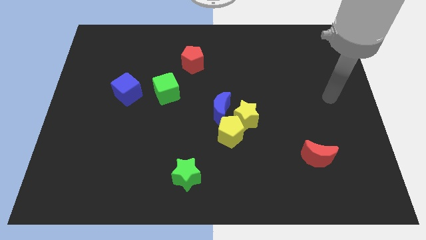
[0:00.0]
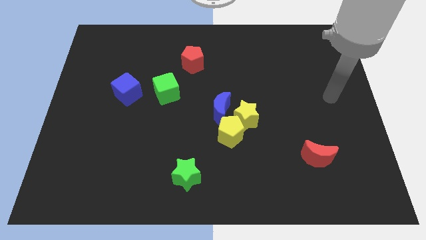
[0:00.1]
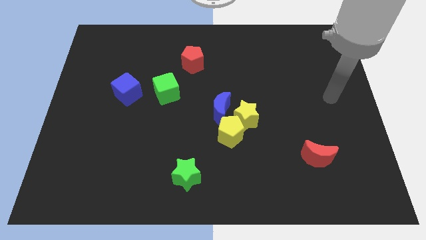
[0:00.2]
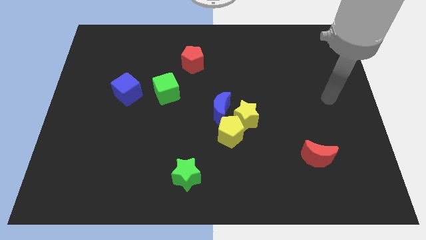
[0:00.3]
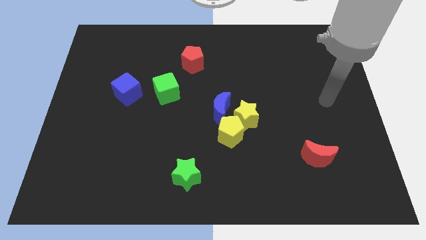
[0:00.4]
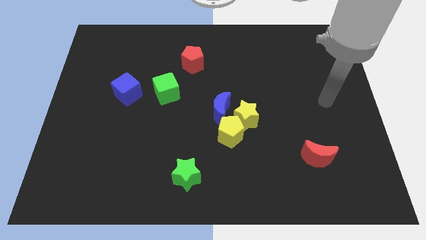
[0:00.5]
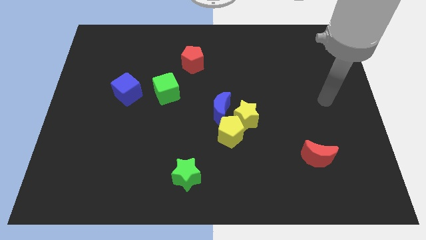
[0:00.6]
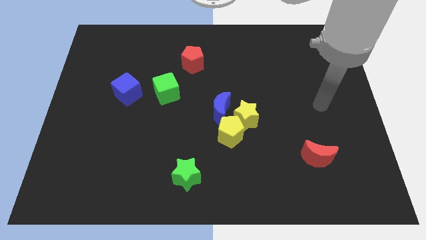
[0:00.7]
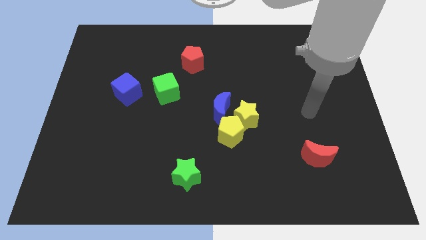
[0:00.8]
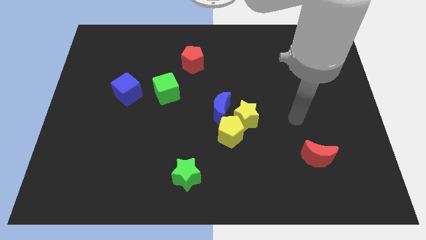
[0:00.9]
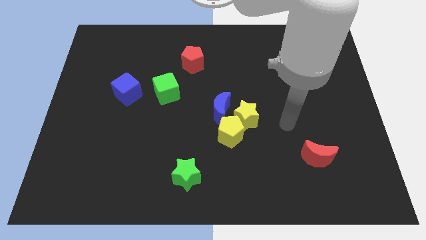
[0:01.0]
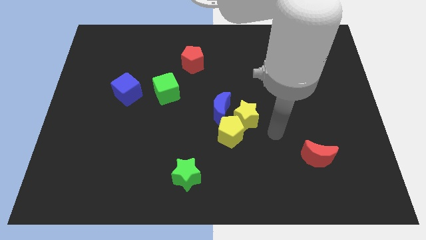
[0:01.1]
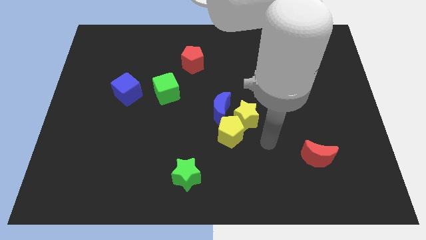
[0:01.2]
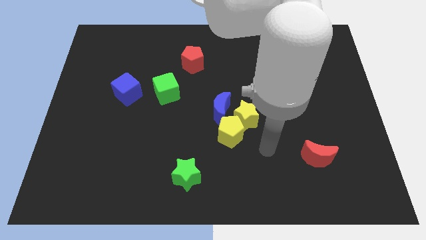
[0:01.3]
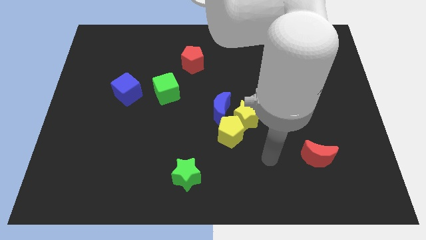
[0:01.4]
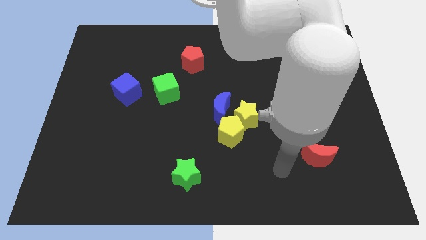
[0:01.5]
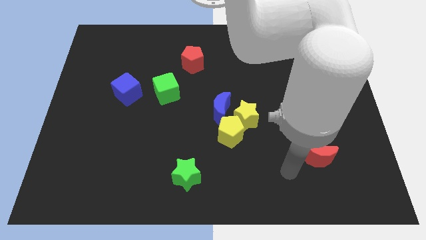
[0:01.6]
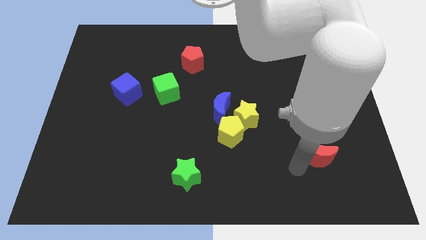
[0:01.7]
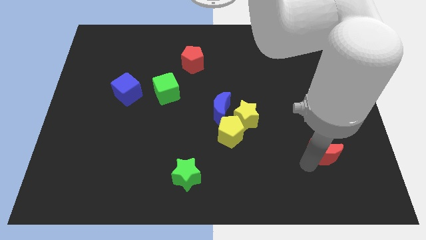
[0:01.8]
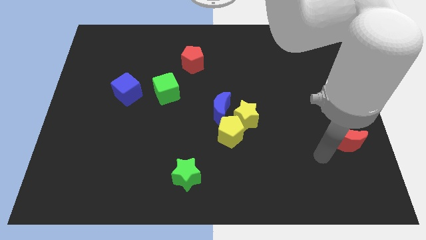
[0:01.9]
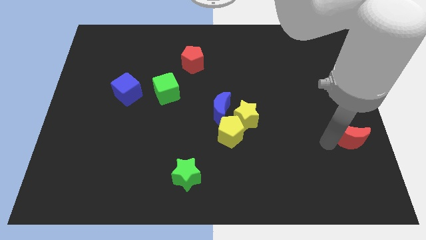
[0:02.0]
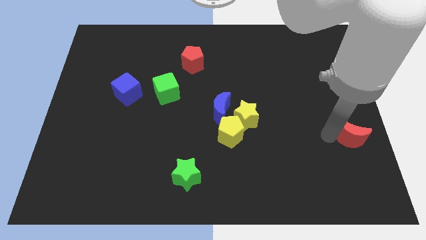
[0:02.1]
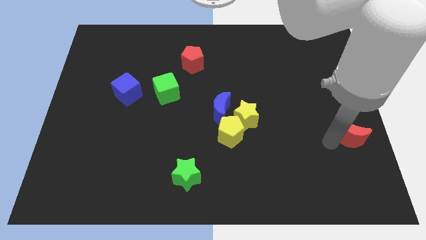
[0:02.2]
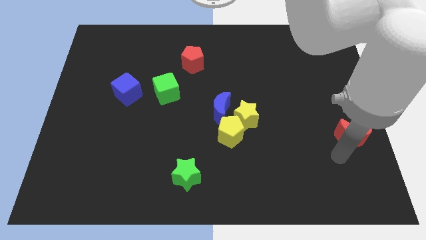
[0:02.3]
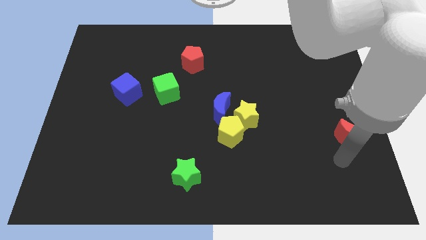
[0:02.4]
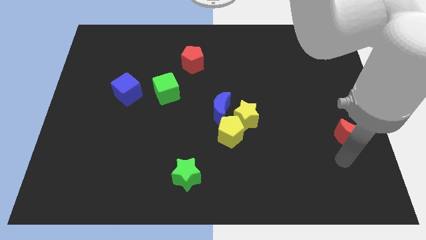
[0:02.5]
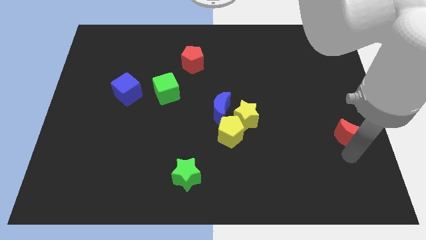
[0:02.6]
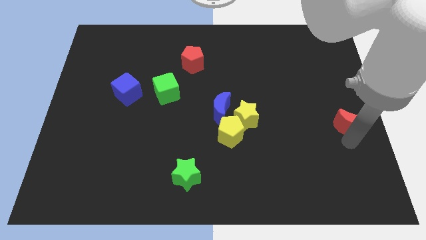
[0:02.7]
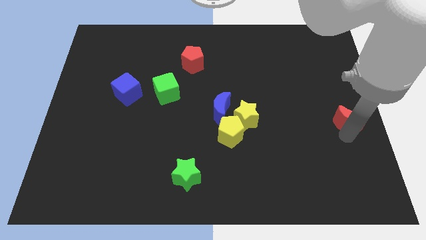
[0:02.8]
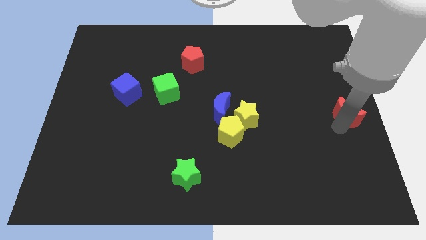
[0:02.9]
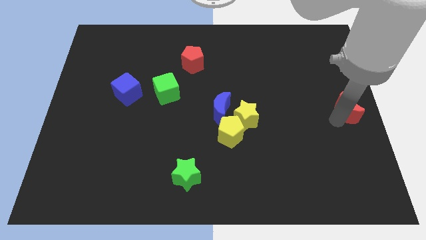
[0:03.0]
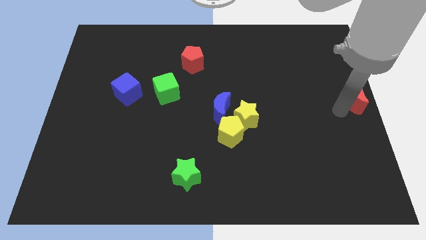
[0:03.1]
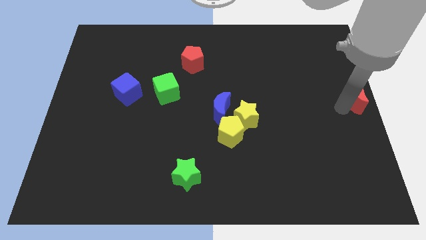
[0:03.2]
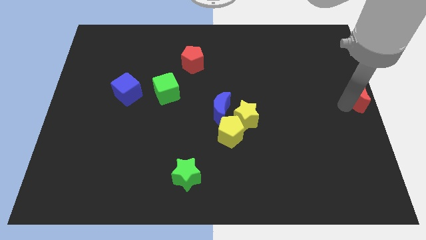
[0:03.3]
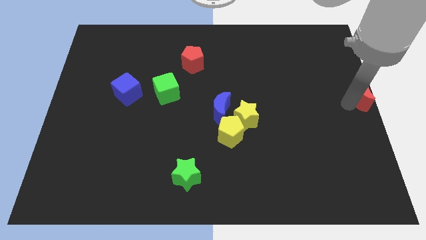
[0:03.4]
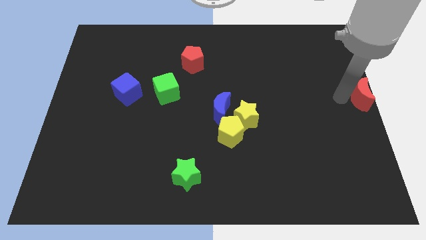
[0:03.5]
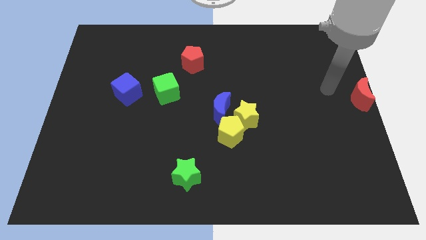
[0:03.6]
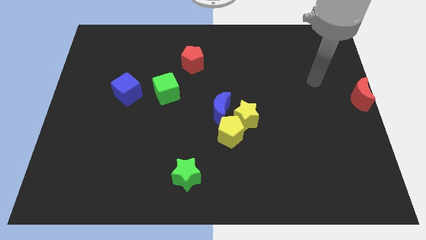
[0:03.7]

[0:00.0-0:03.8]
move the red crescent to the center right

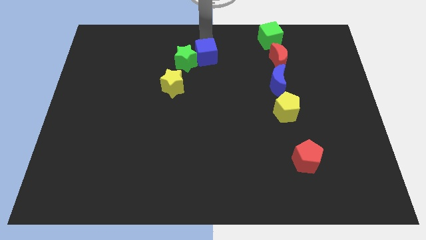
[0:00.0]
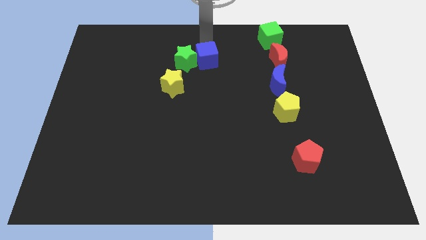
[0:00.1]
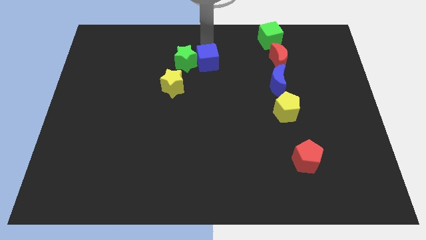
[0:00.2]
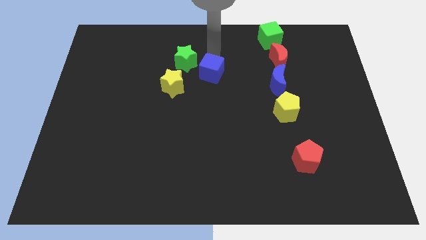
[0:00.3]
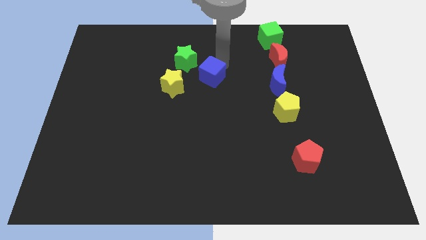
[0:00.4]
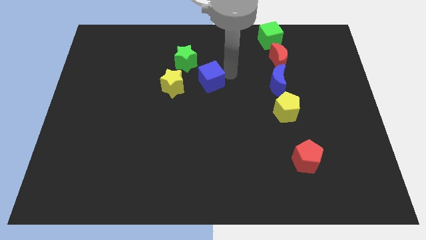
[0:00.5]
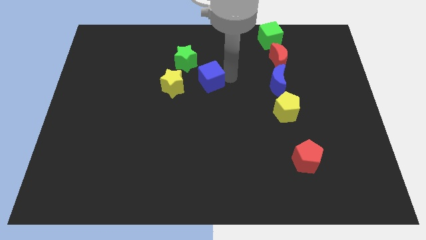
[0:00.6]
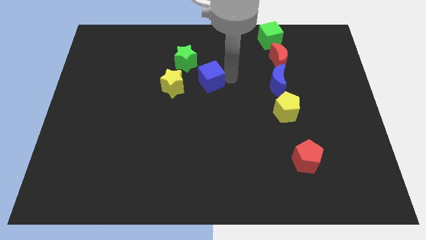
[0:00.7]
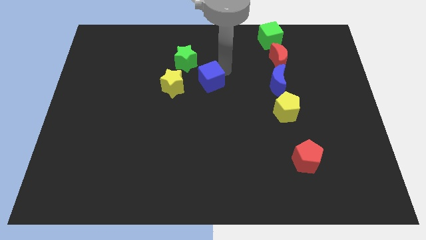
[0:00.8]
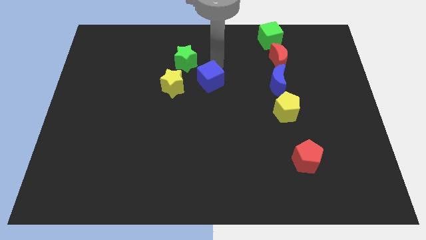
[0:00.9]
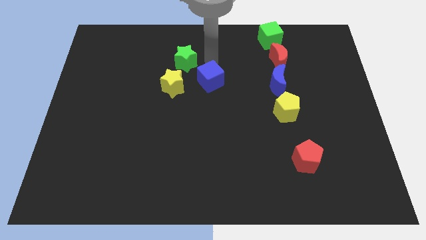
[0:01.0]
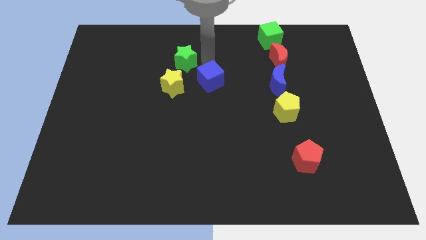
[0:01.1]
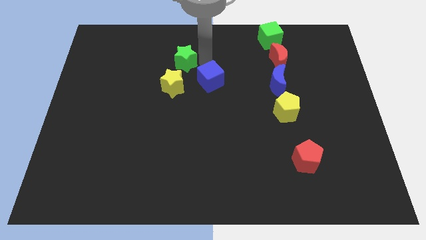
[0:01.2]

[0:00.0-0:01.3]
push the blue cube to the right side of the yellow star

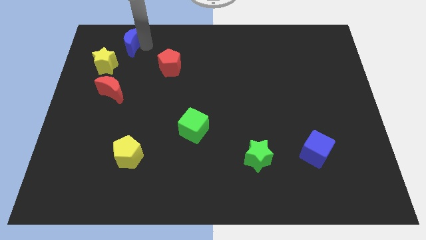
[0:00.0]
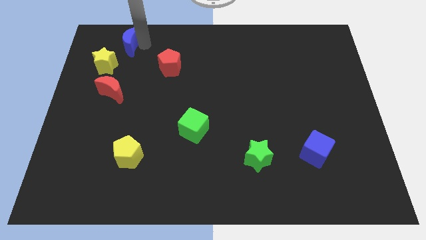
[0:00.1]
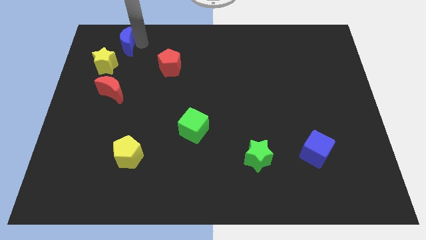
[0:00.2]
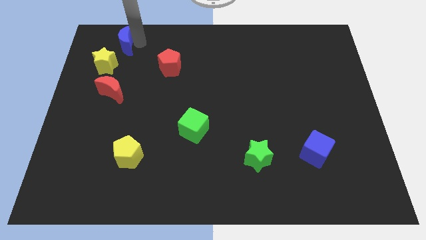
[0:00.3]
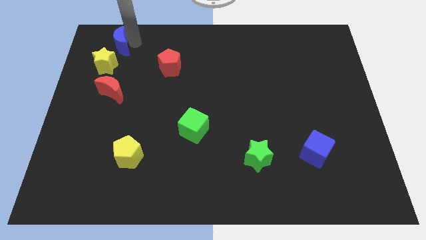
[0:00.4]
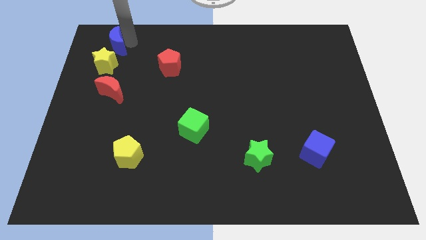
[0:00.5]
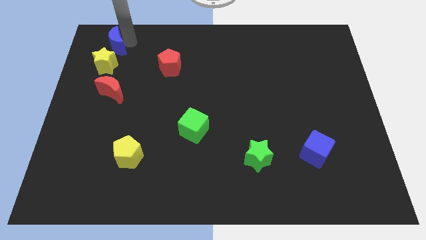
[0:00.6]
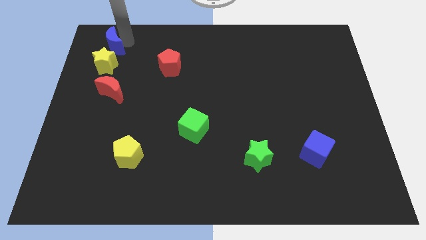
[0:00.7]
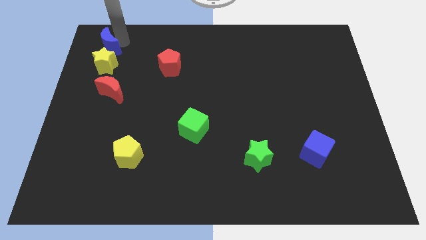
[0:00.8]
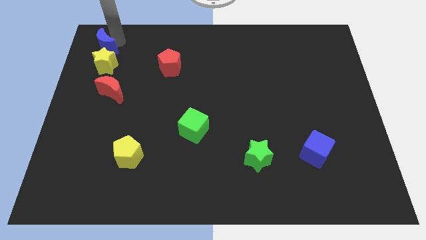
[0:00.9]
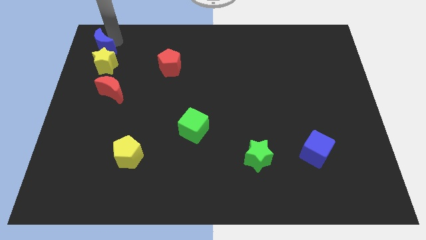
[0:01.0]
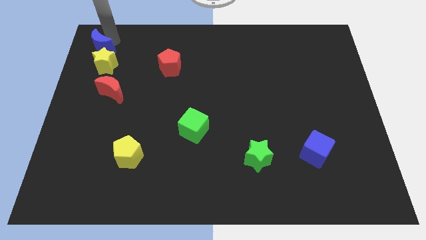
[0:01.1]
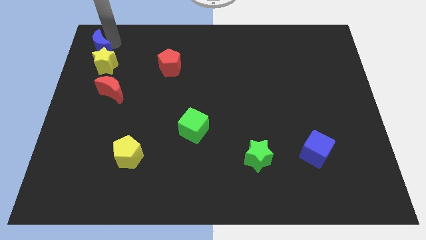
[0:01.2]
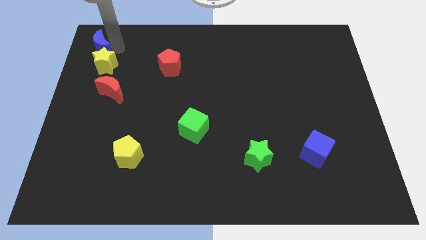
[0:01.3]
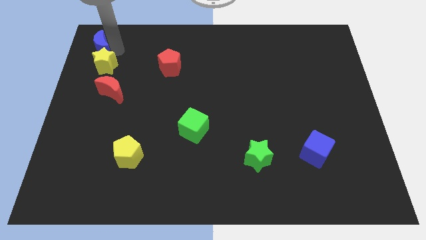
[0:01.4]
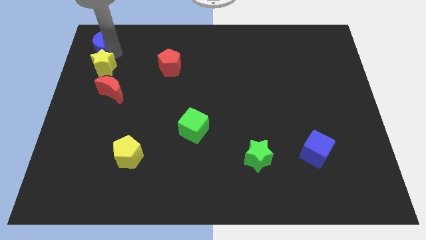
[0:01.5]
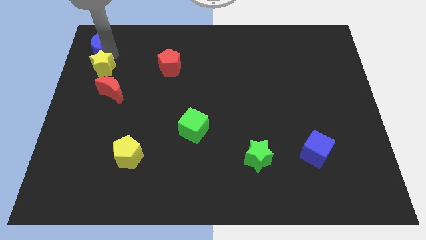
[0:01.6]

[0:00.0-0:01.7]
slide the blue crescent into the top side of the yellow star

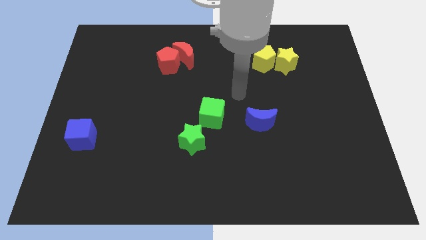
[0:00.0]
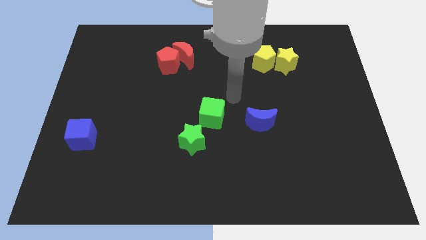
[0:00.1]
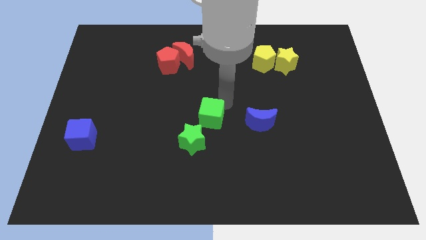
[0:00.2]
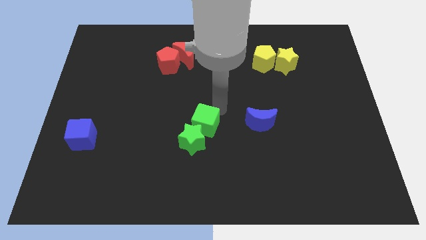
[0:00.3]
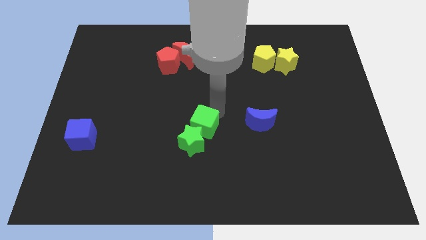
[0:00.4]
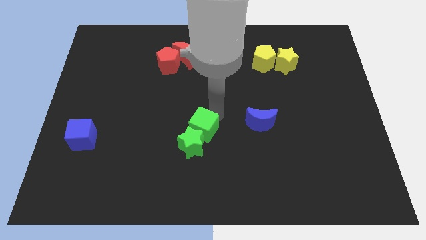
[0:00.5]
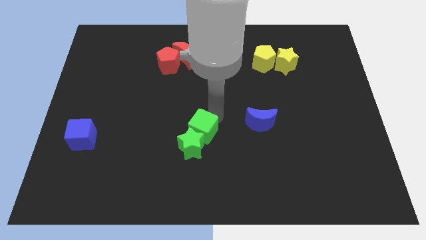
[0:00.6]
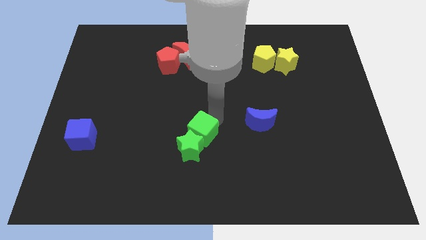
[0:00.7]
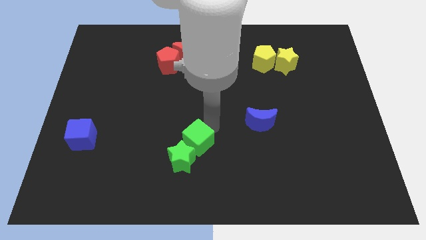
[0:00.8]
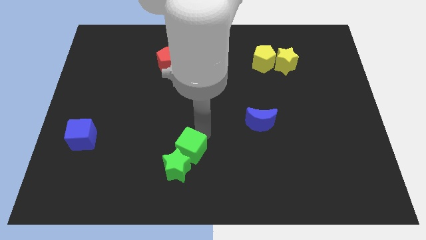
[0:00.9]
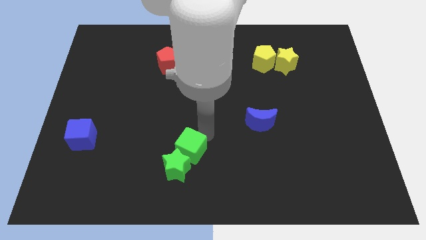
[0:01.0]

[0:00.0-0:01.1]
push the green blocks slightly to the bottom

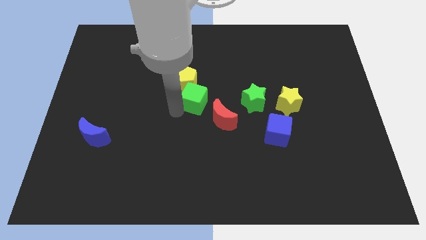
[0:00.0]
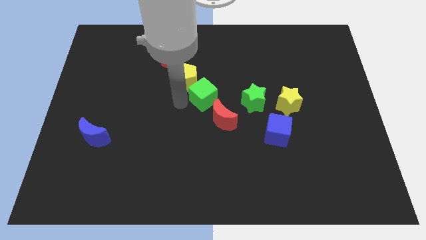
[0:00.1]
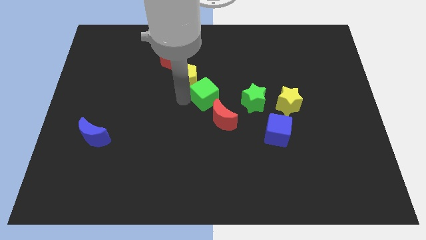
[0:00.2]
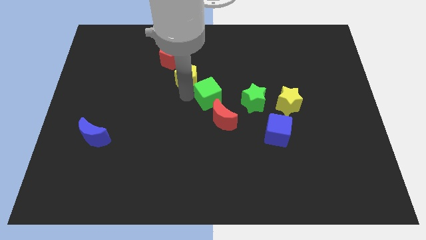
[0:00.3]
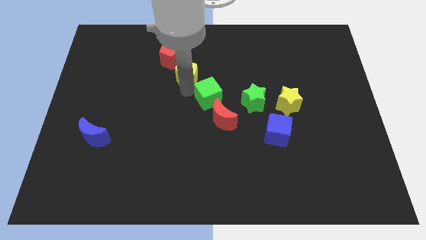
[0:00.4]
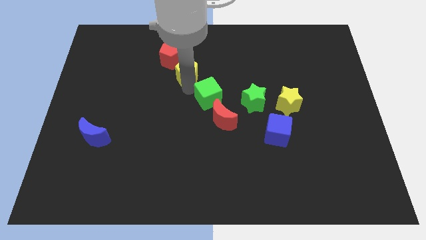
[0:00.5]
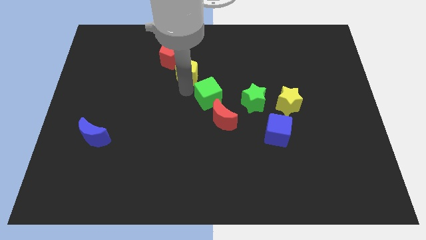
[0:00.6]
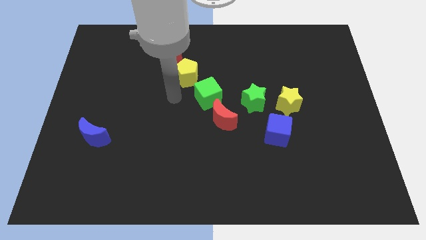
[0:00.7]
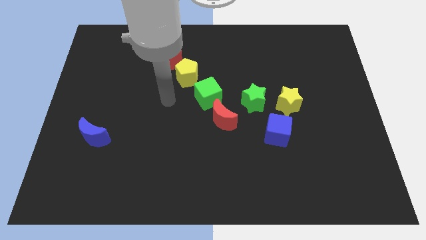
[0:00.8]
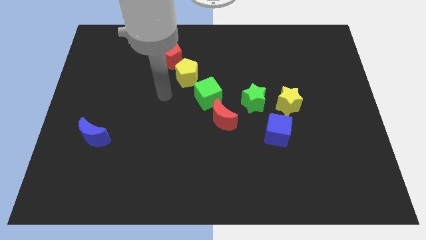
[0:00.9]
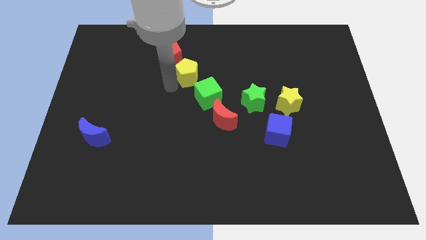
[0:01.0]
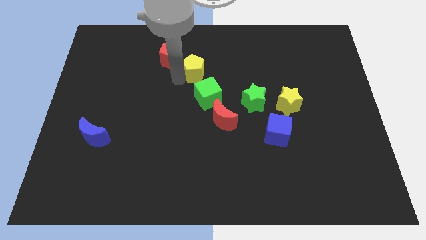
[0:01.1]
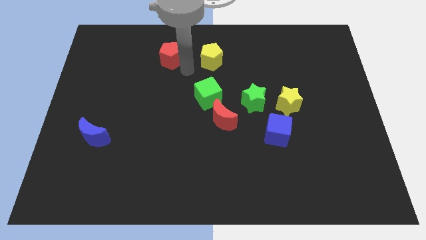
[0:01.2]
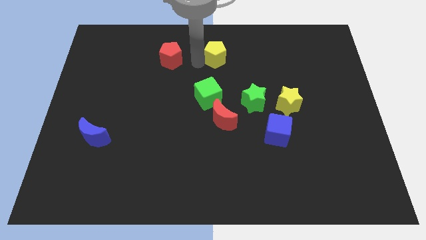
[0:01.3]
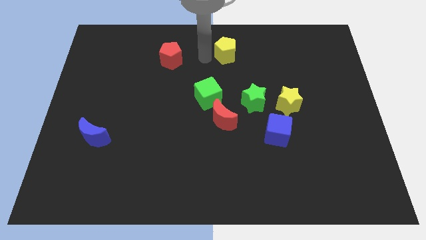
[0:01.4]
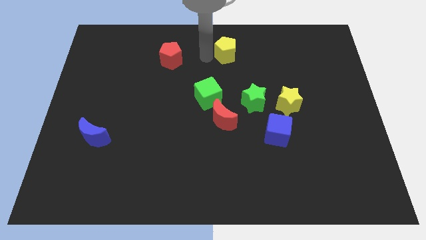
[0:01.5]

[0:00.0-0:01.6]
move the yellow pentagon towards top center of the board
